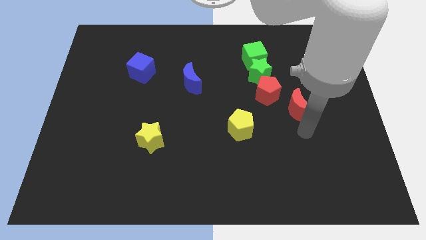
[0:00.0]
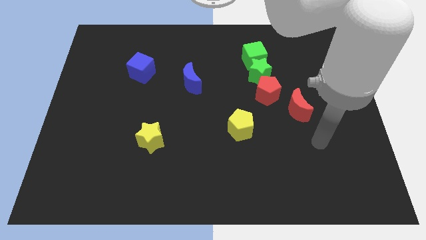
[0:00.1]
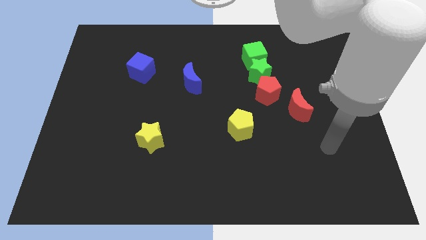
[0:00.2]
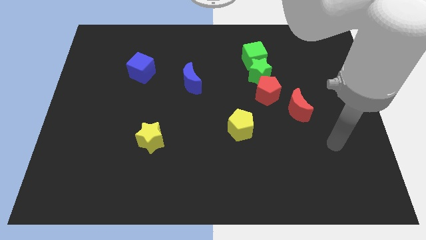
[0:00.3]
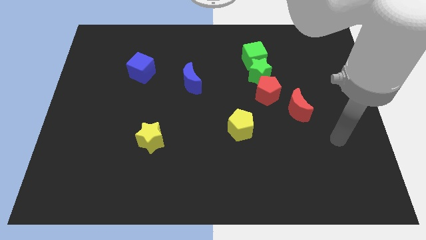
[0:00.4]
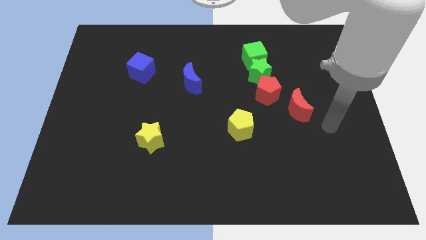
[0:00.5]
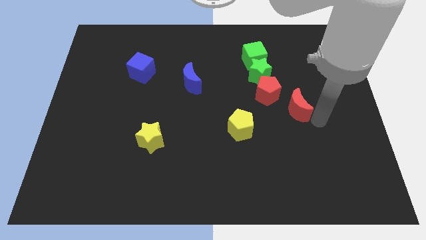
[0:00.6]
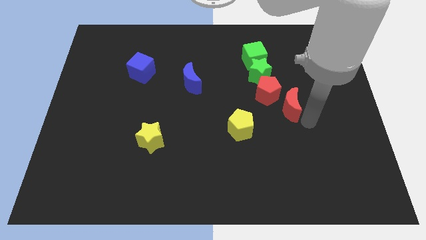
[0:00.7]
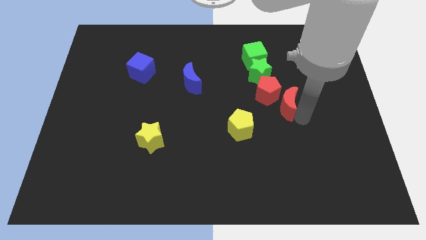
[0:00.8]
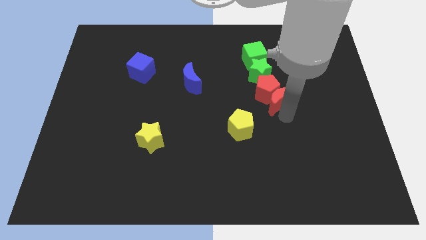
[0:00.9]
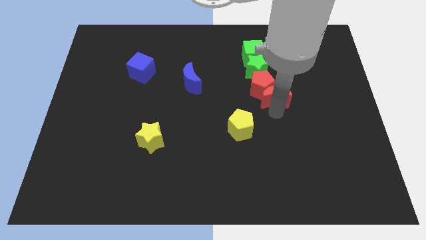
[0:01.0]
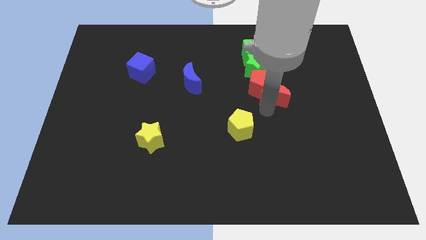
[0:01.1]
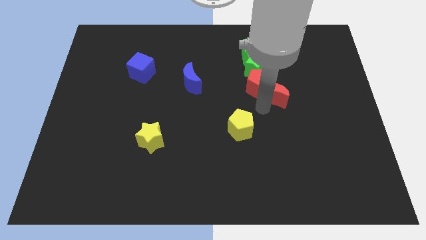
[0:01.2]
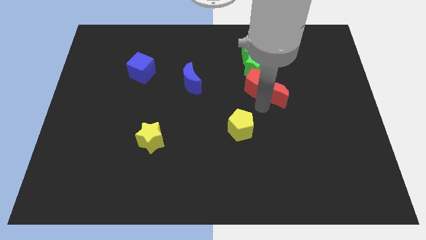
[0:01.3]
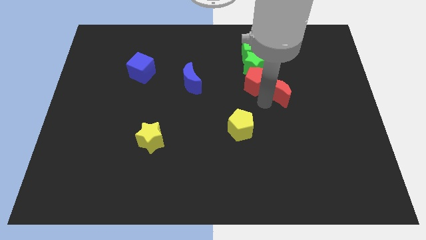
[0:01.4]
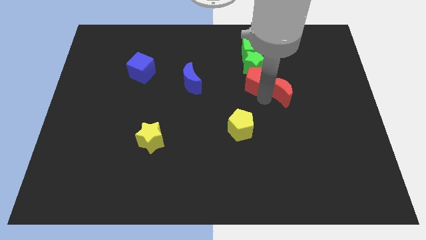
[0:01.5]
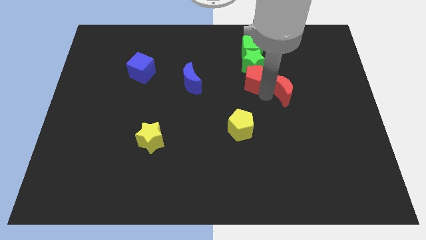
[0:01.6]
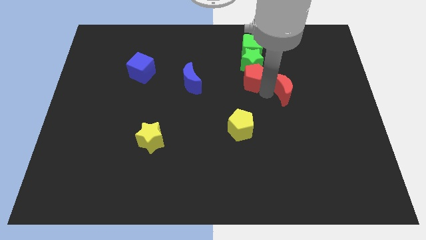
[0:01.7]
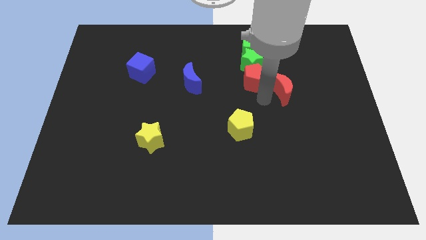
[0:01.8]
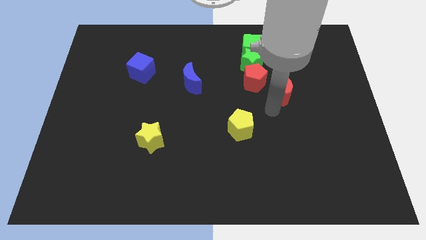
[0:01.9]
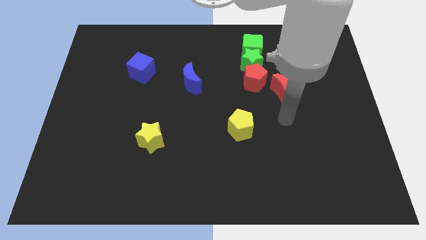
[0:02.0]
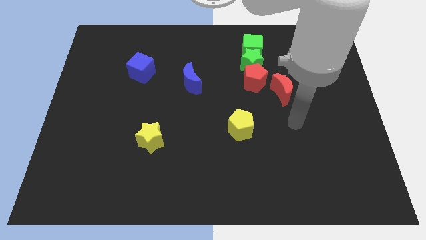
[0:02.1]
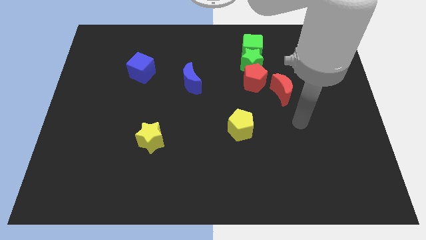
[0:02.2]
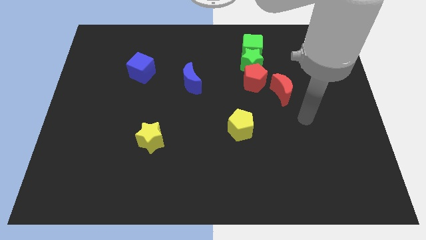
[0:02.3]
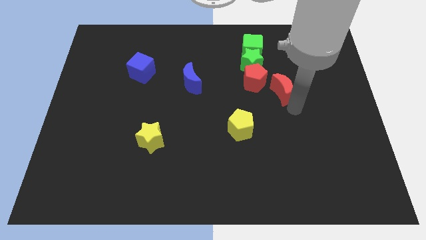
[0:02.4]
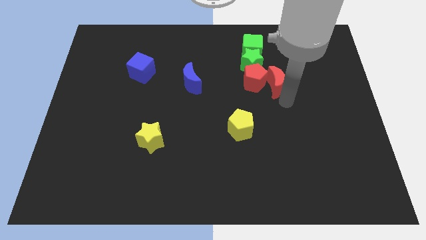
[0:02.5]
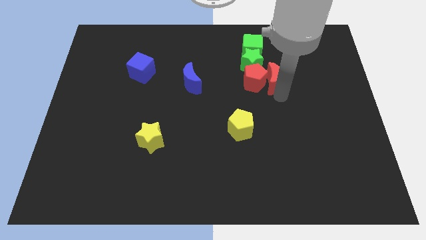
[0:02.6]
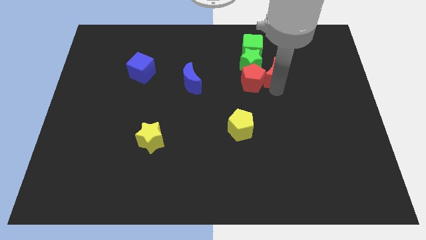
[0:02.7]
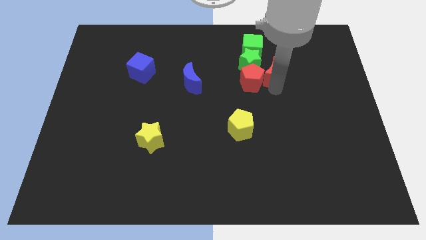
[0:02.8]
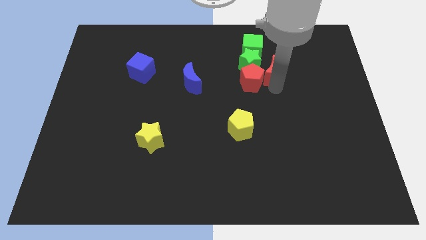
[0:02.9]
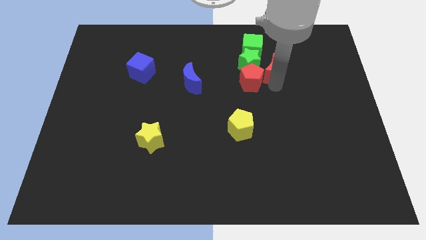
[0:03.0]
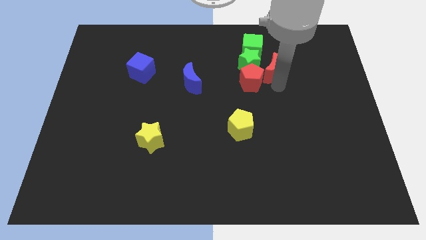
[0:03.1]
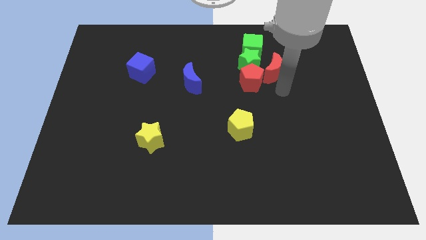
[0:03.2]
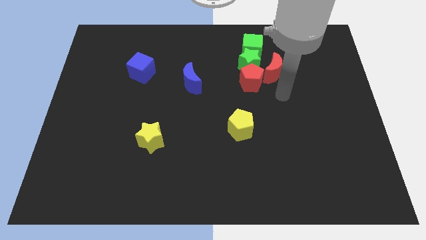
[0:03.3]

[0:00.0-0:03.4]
place the red crescent to the top right corner of the red pentagon

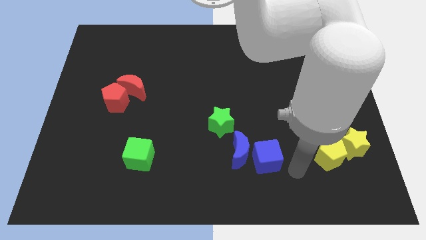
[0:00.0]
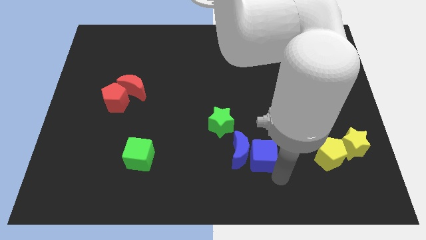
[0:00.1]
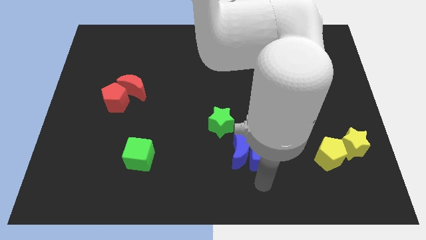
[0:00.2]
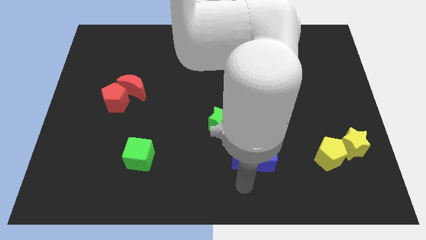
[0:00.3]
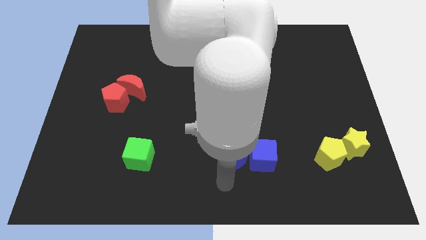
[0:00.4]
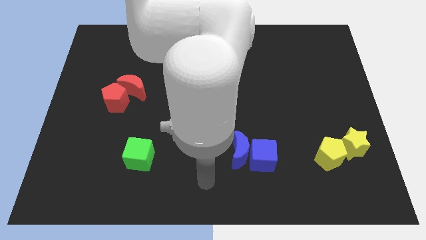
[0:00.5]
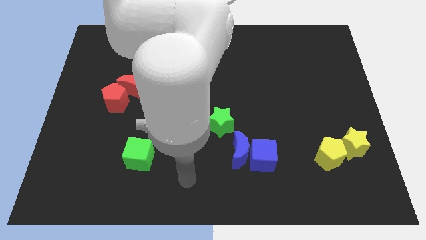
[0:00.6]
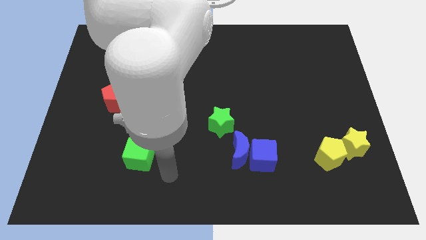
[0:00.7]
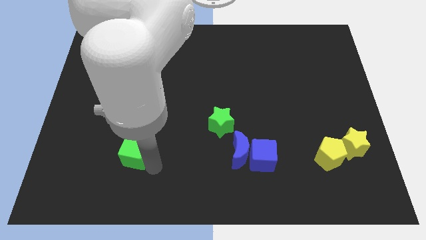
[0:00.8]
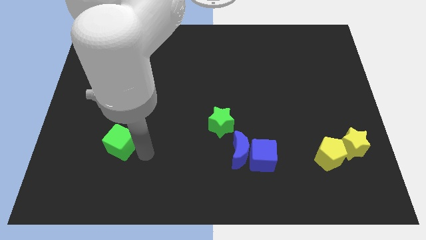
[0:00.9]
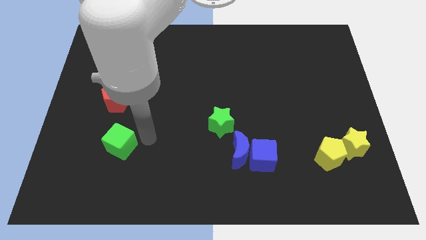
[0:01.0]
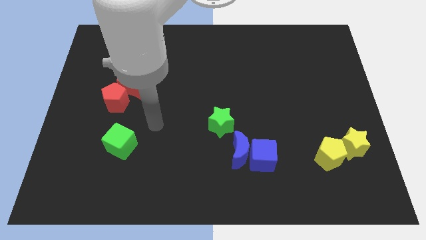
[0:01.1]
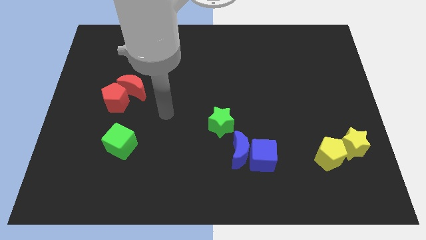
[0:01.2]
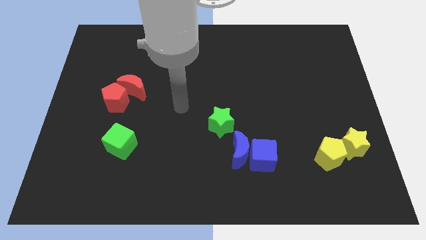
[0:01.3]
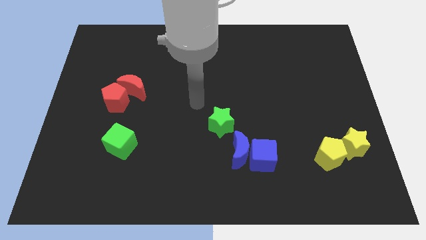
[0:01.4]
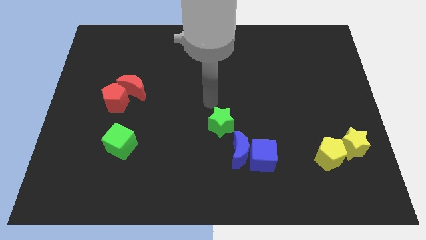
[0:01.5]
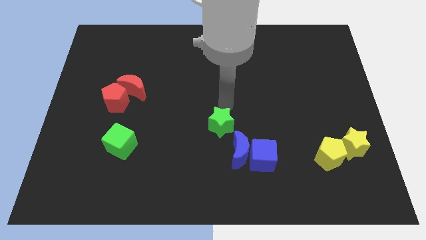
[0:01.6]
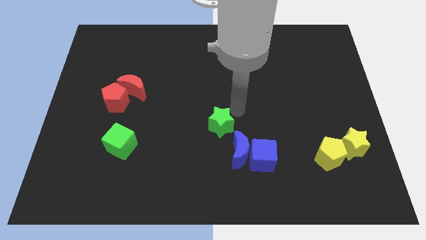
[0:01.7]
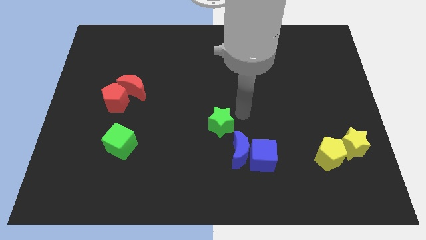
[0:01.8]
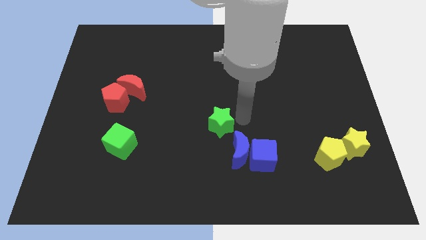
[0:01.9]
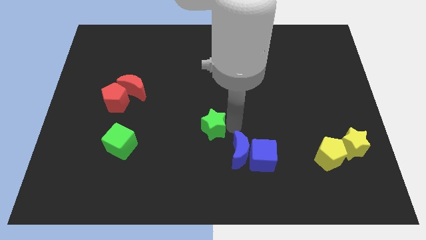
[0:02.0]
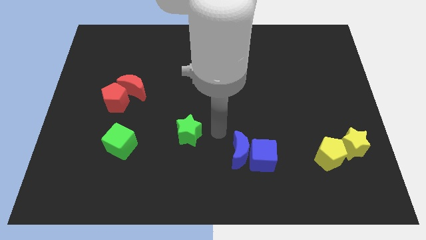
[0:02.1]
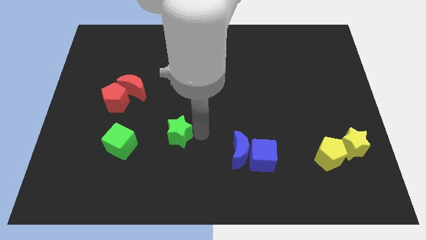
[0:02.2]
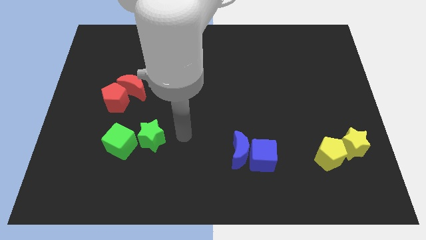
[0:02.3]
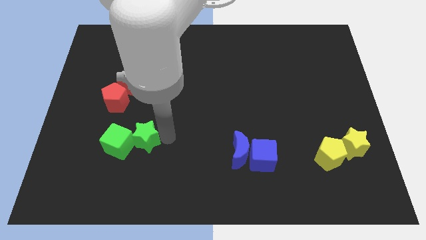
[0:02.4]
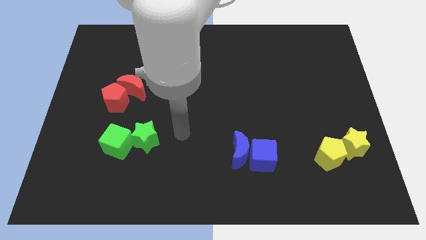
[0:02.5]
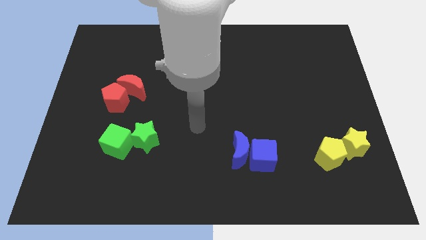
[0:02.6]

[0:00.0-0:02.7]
move the green star into the green cube

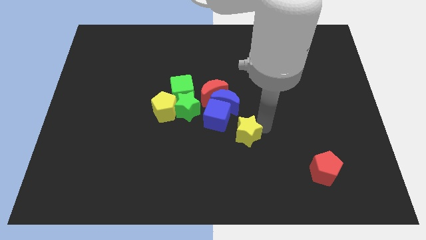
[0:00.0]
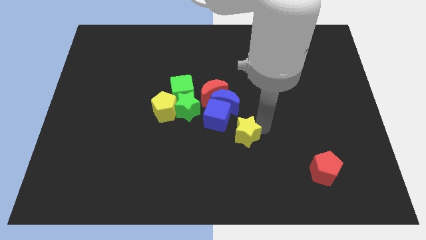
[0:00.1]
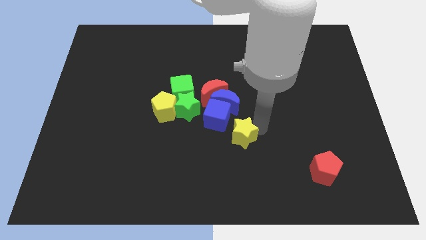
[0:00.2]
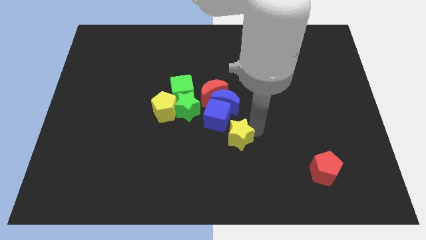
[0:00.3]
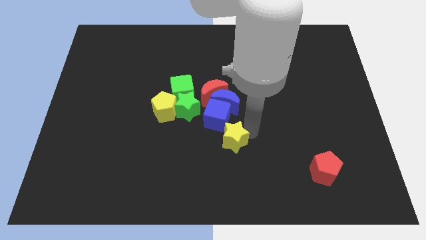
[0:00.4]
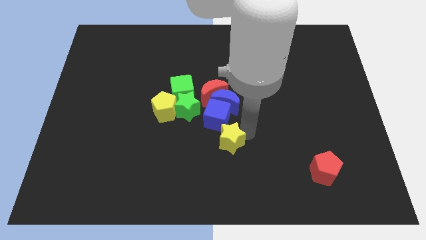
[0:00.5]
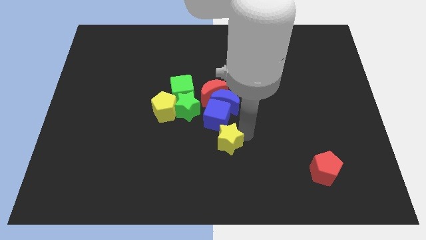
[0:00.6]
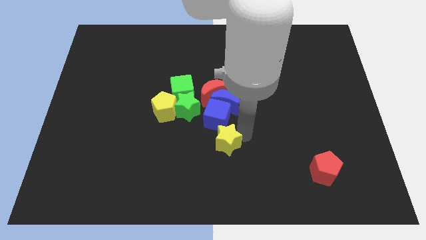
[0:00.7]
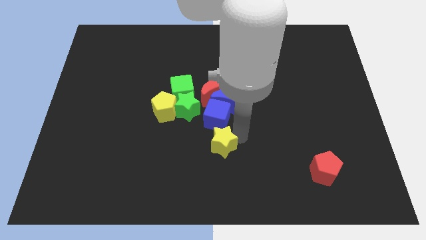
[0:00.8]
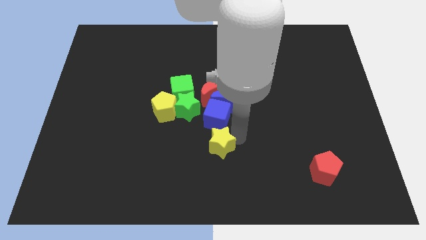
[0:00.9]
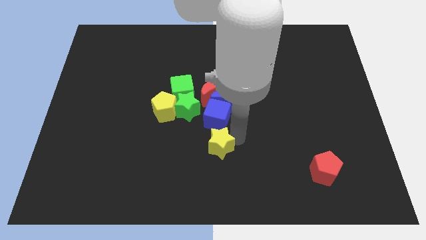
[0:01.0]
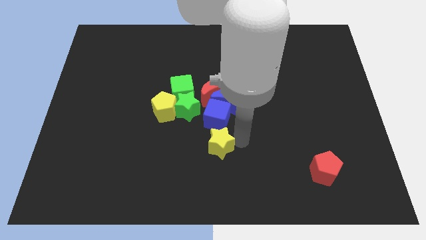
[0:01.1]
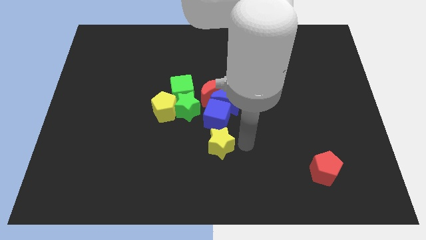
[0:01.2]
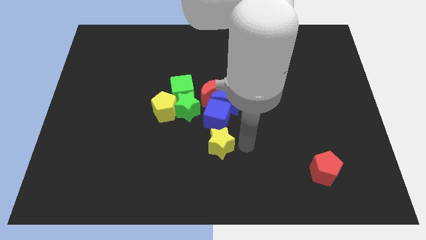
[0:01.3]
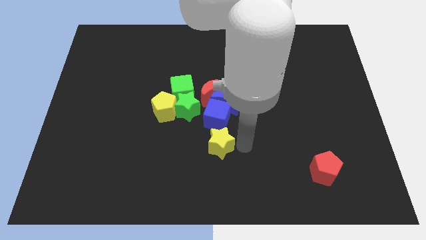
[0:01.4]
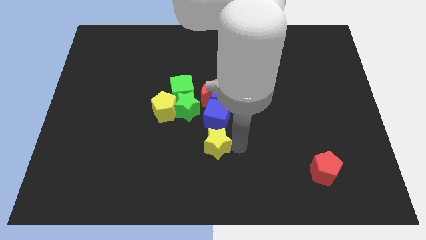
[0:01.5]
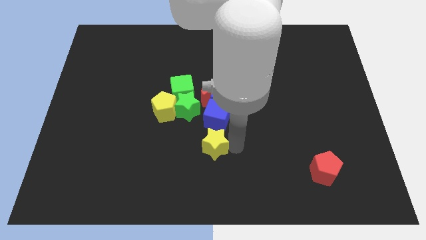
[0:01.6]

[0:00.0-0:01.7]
push the yellow star to the bottom of the blue cube

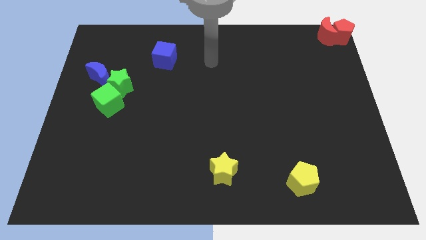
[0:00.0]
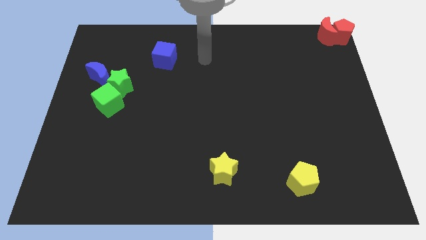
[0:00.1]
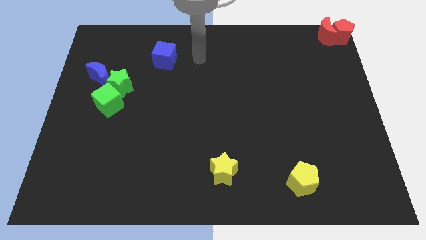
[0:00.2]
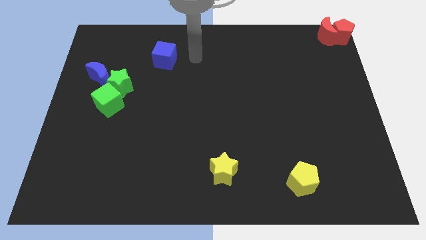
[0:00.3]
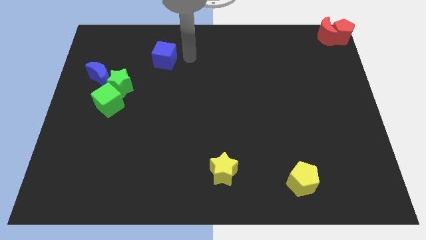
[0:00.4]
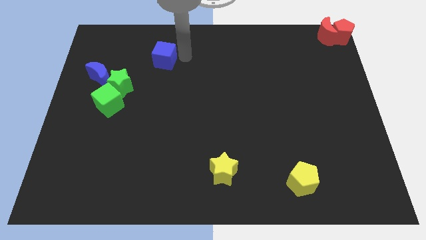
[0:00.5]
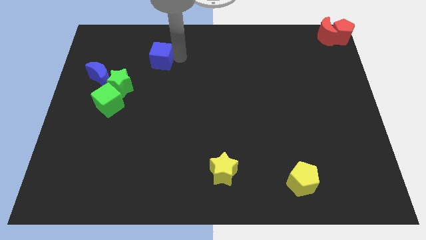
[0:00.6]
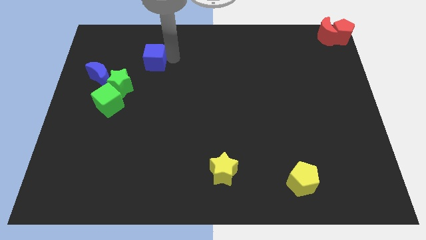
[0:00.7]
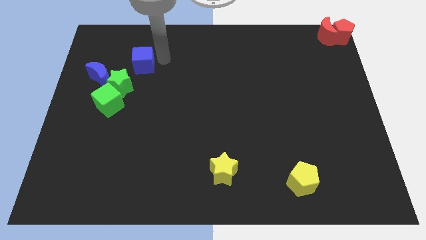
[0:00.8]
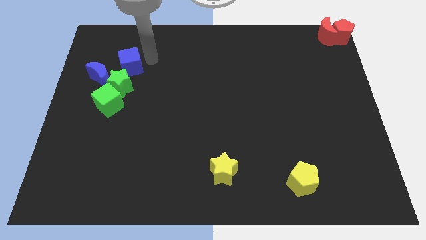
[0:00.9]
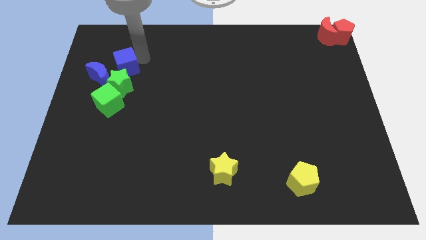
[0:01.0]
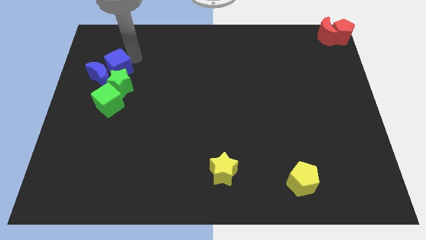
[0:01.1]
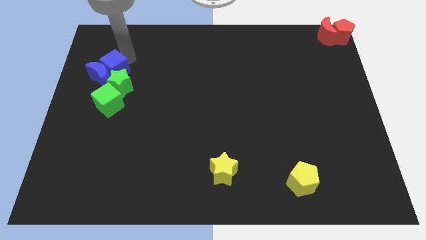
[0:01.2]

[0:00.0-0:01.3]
move the blue cube into the blue moon
